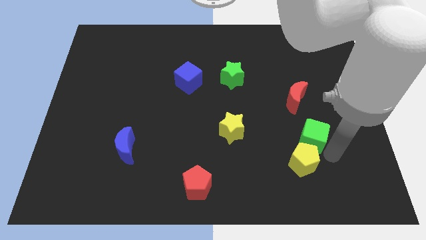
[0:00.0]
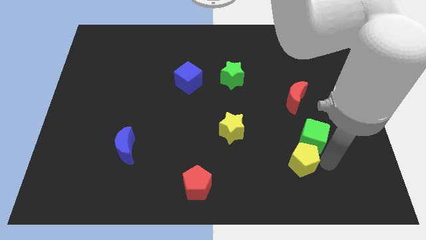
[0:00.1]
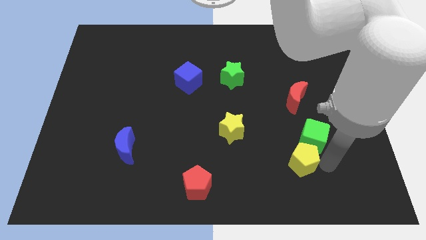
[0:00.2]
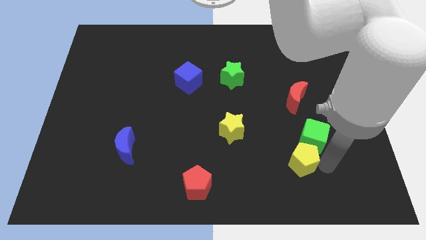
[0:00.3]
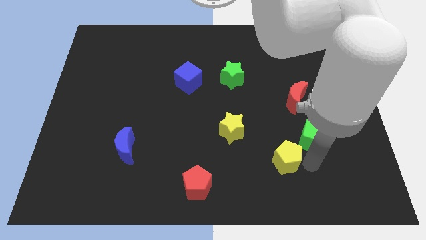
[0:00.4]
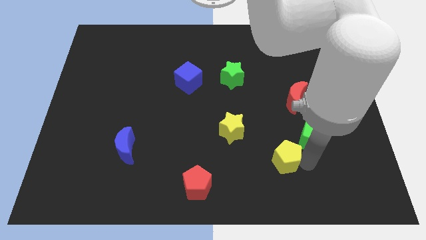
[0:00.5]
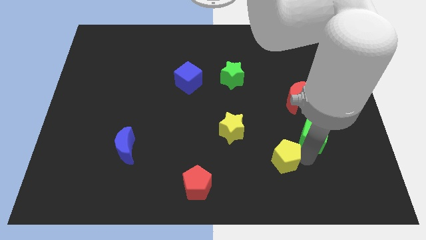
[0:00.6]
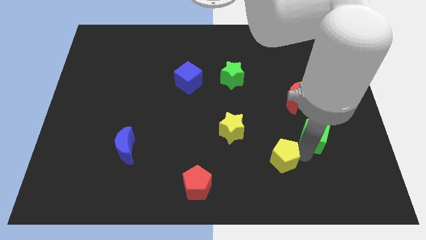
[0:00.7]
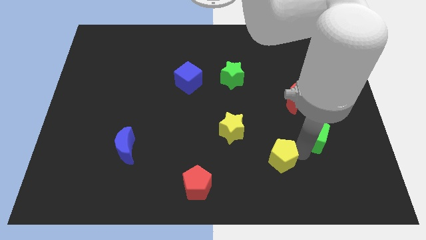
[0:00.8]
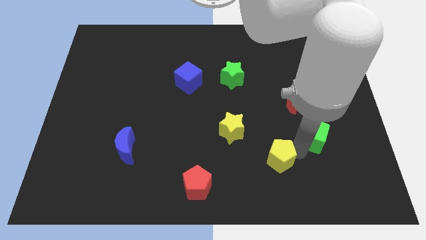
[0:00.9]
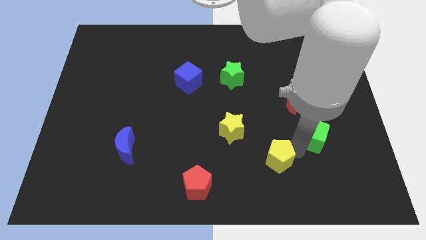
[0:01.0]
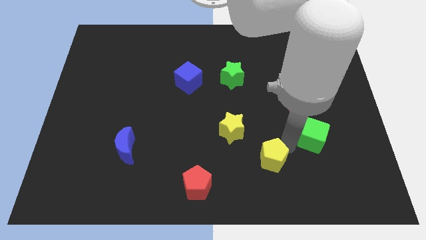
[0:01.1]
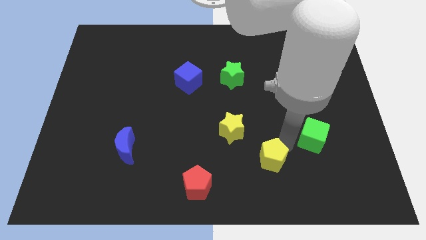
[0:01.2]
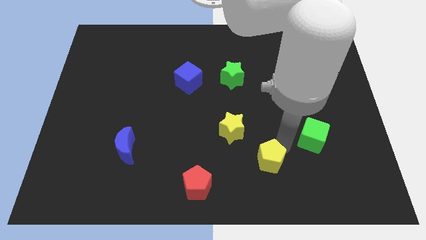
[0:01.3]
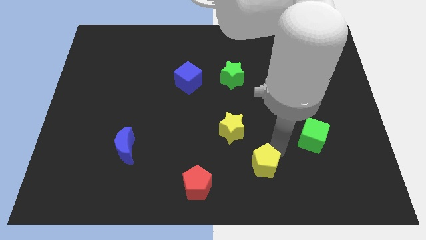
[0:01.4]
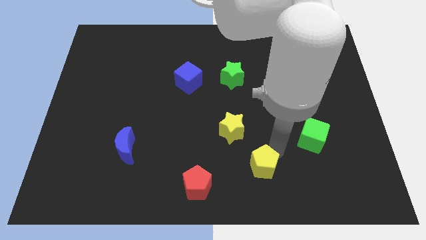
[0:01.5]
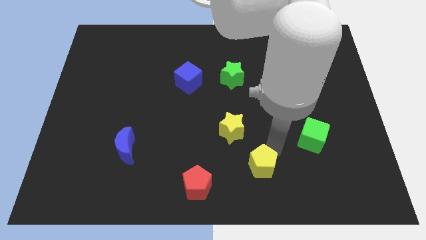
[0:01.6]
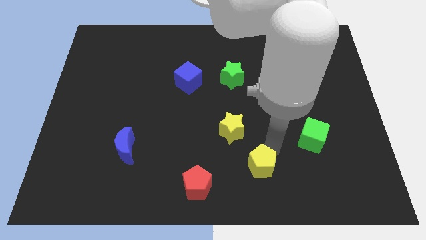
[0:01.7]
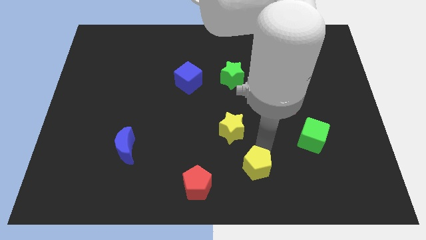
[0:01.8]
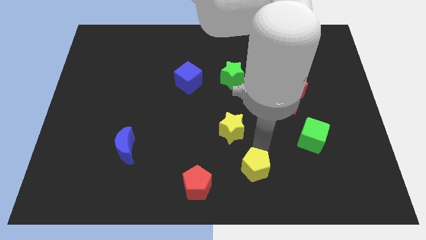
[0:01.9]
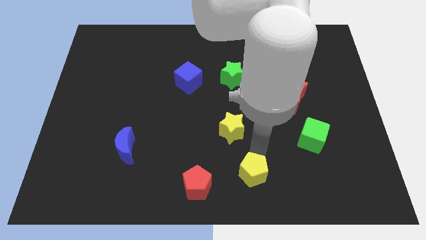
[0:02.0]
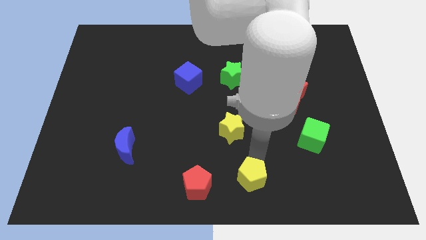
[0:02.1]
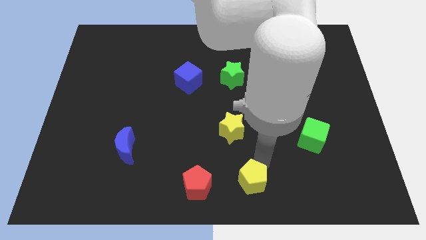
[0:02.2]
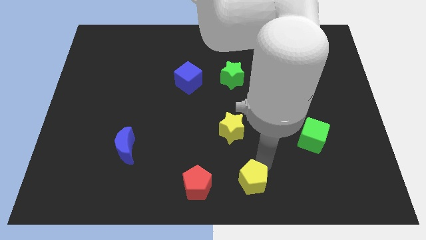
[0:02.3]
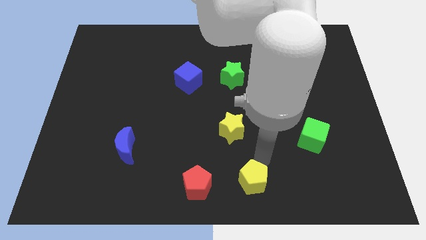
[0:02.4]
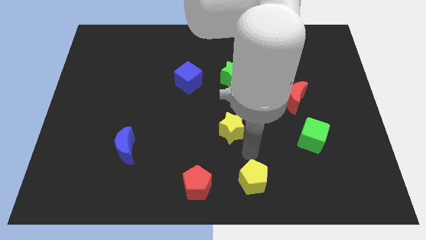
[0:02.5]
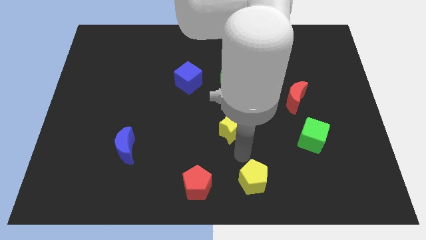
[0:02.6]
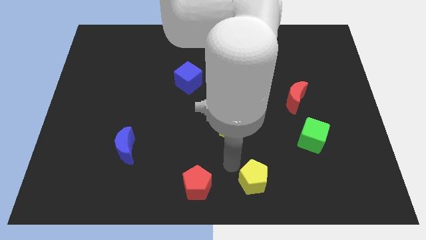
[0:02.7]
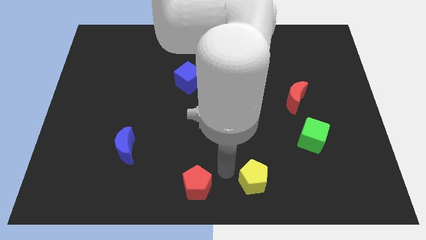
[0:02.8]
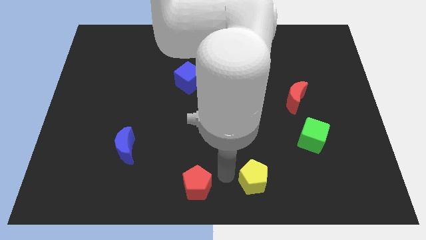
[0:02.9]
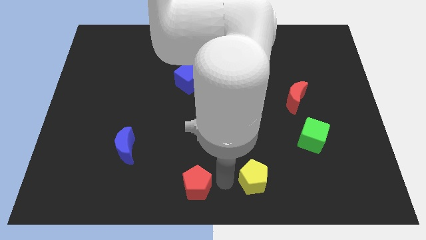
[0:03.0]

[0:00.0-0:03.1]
separate yellow pentagon from green cube

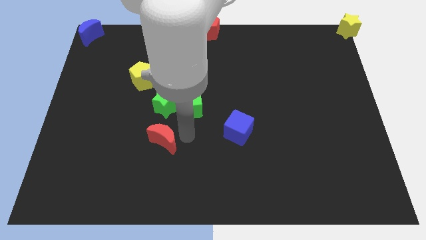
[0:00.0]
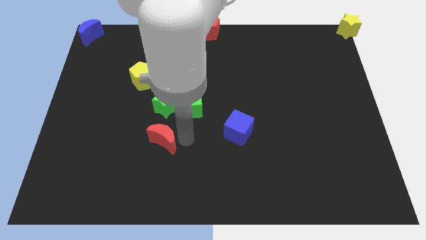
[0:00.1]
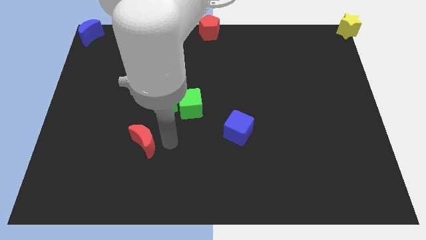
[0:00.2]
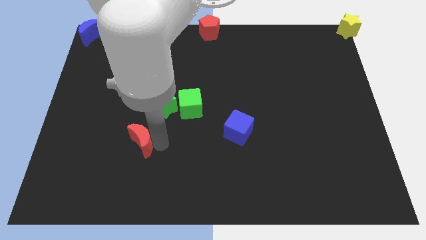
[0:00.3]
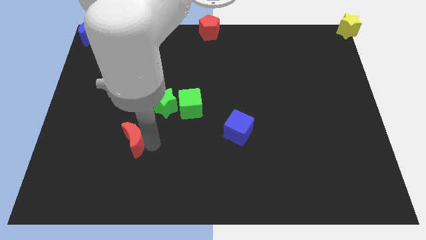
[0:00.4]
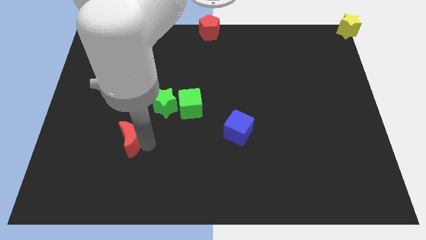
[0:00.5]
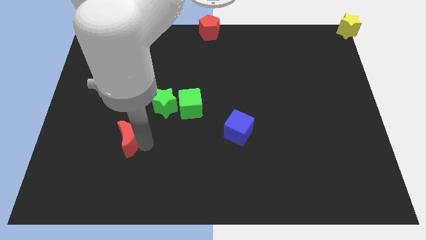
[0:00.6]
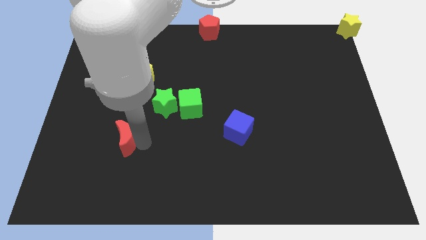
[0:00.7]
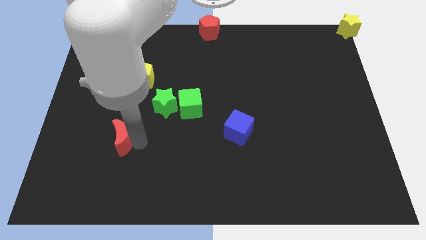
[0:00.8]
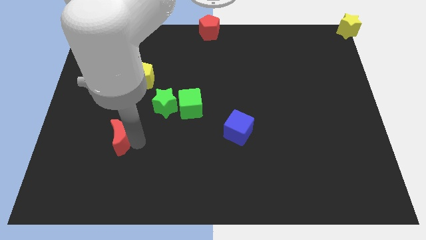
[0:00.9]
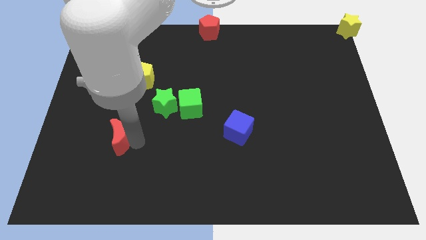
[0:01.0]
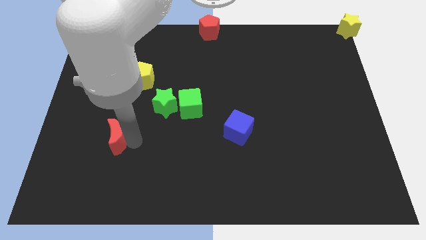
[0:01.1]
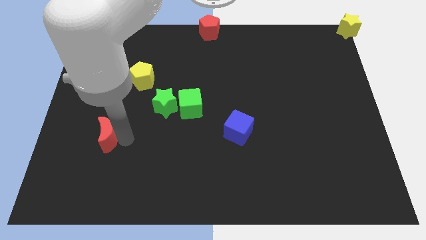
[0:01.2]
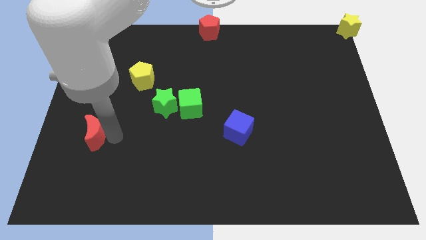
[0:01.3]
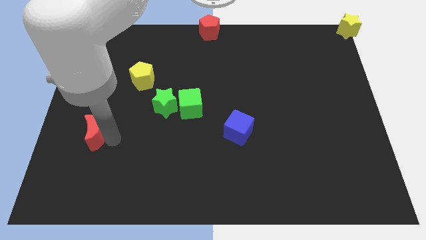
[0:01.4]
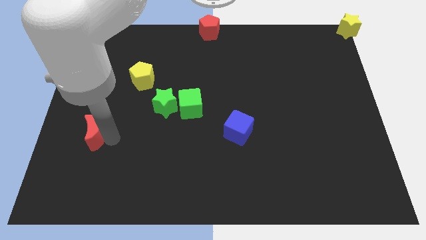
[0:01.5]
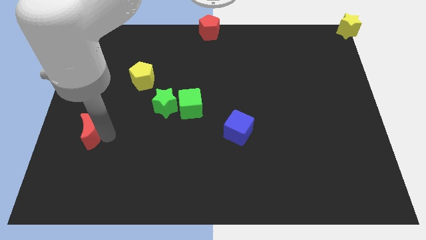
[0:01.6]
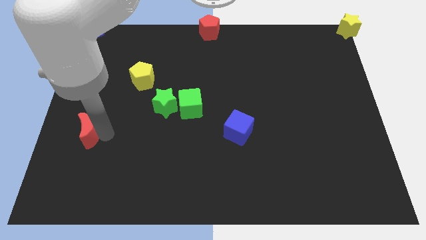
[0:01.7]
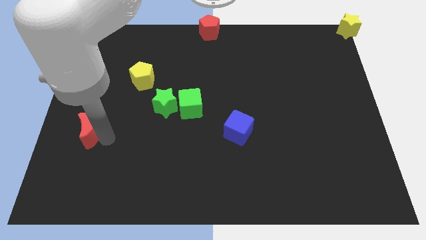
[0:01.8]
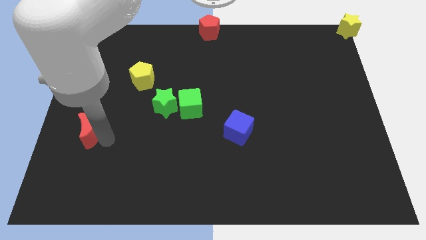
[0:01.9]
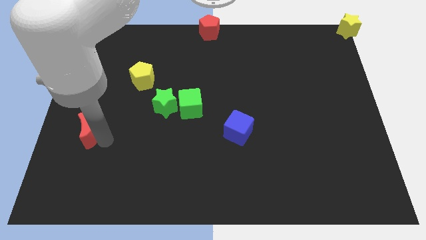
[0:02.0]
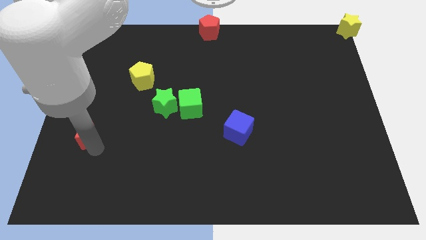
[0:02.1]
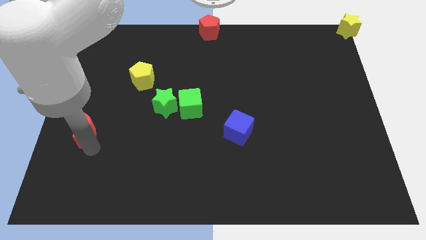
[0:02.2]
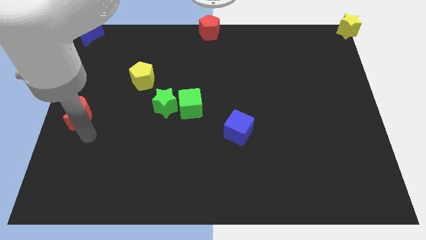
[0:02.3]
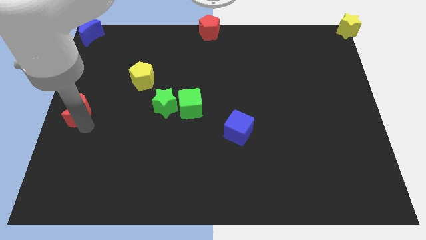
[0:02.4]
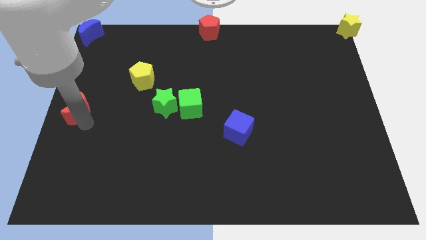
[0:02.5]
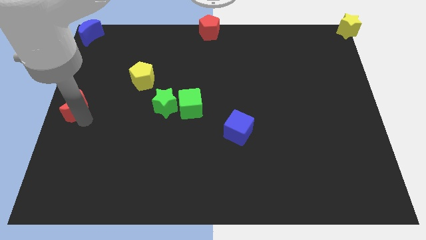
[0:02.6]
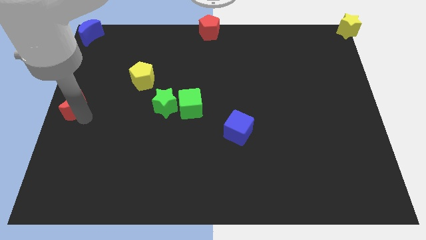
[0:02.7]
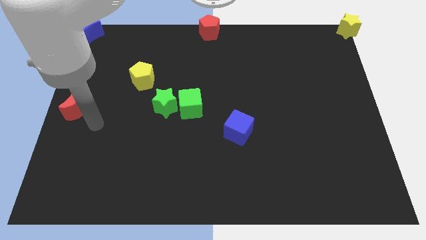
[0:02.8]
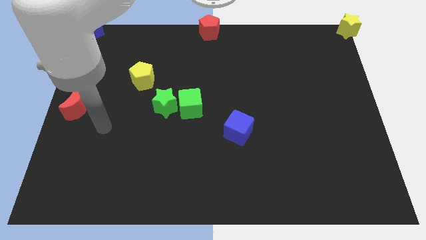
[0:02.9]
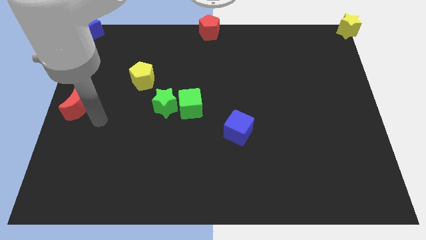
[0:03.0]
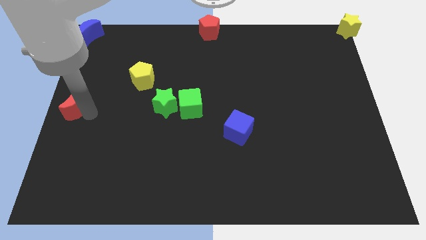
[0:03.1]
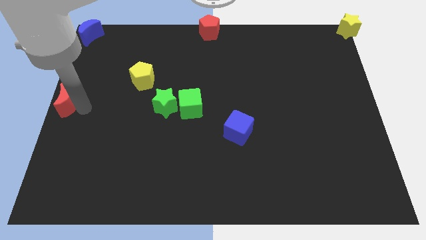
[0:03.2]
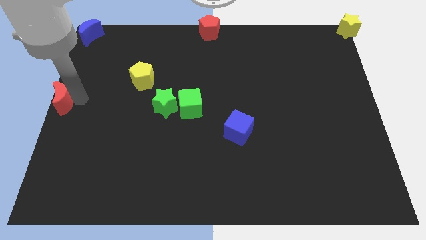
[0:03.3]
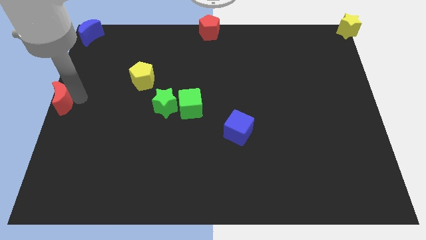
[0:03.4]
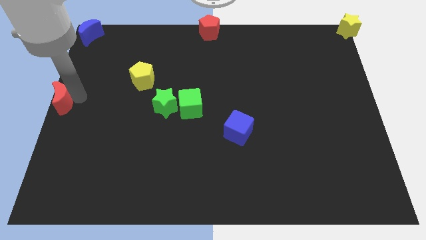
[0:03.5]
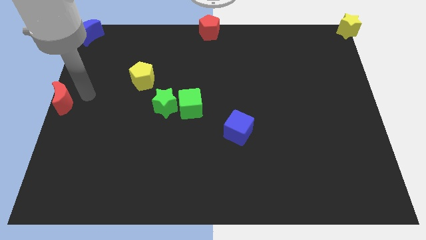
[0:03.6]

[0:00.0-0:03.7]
push the red crescent to the left center

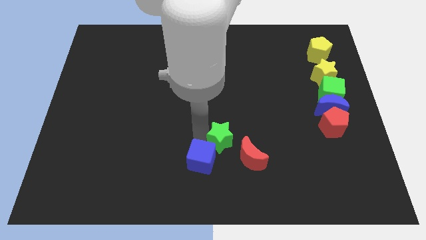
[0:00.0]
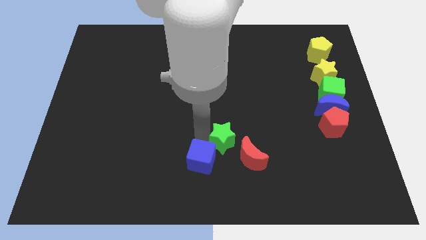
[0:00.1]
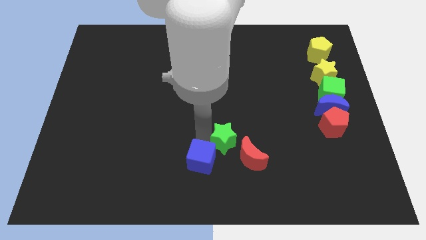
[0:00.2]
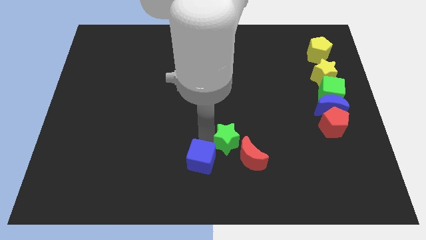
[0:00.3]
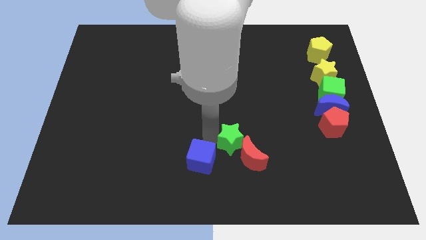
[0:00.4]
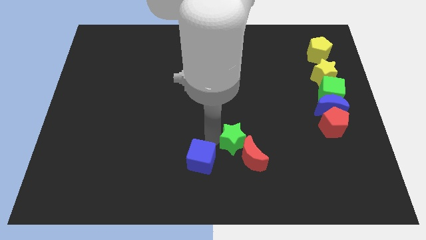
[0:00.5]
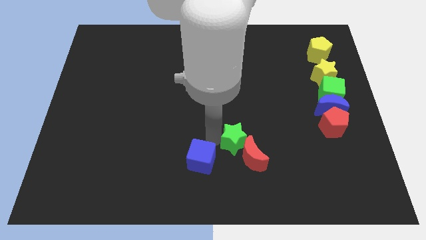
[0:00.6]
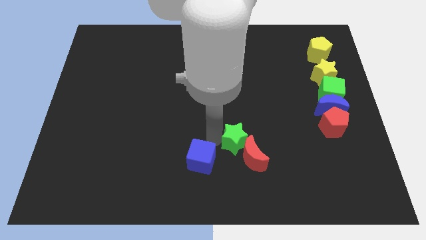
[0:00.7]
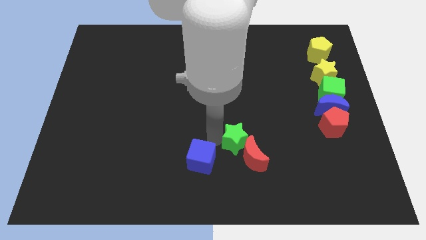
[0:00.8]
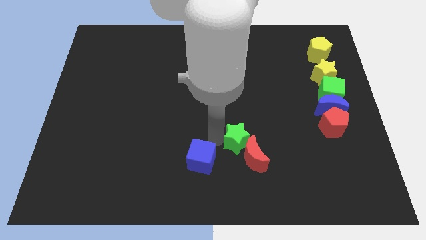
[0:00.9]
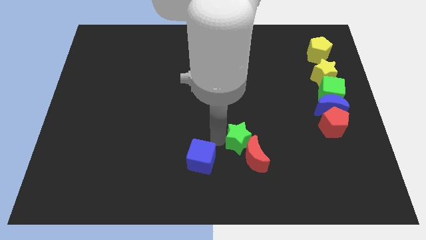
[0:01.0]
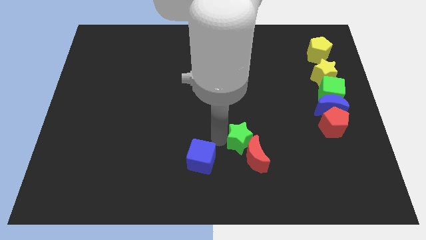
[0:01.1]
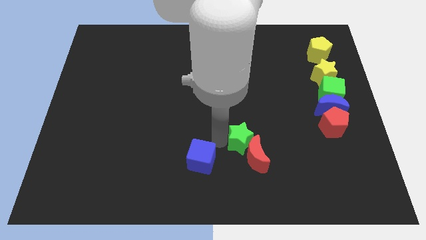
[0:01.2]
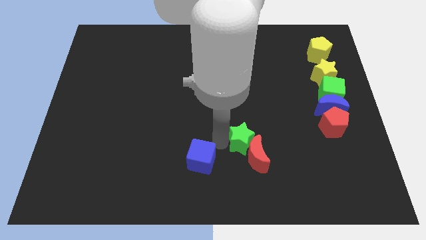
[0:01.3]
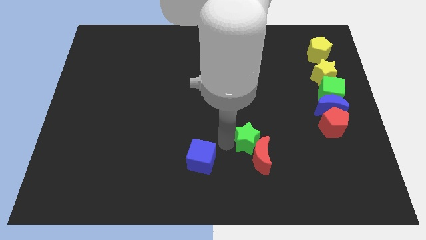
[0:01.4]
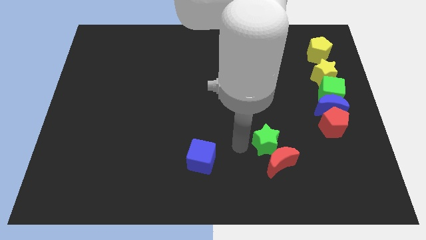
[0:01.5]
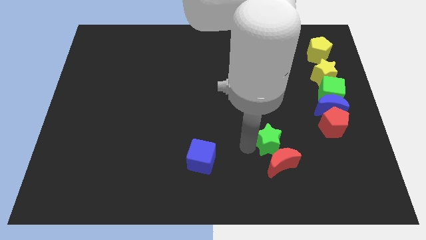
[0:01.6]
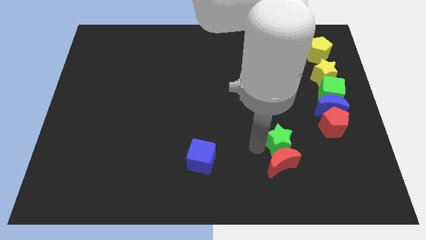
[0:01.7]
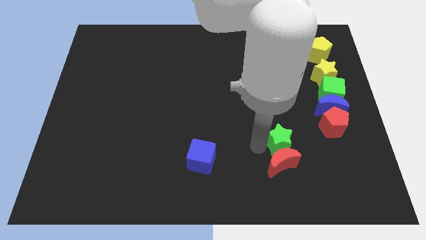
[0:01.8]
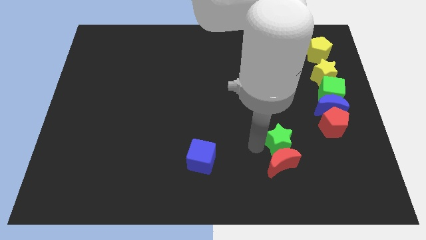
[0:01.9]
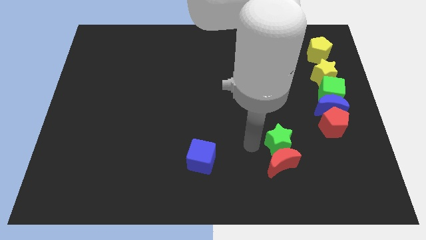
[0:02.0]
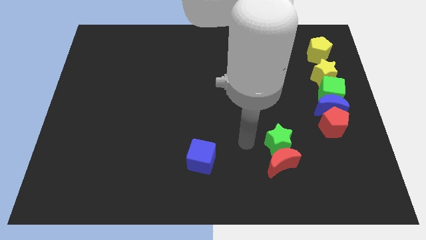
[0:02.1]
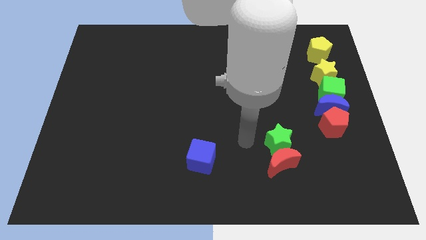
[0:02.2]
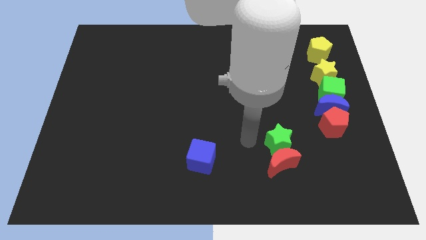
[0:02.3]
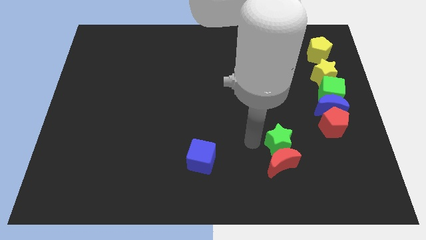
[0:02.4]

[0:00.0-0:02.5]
push the green star into the red moon
